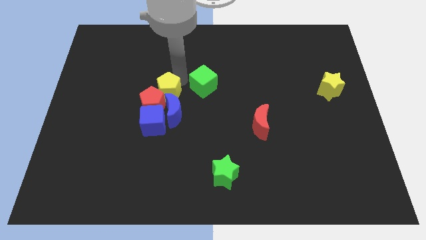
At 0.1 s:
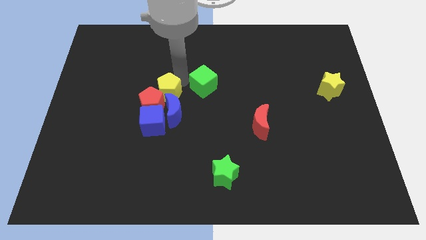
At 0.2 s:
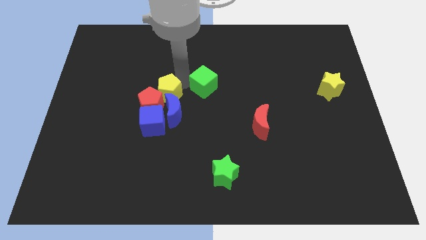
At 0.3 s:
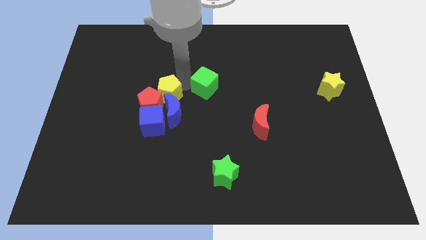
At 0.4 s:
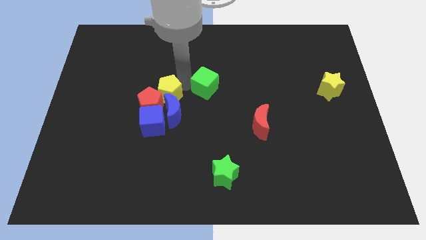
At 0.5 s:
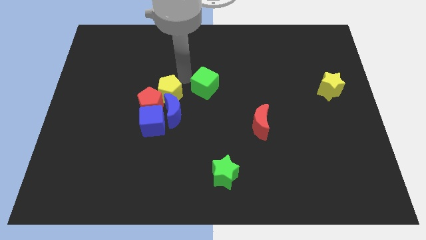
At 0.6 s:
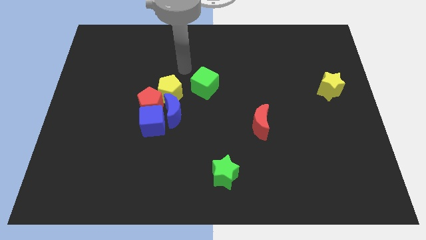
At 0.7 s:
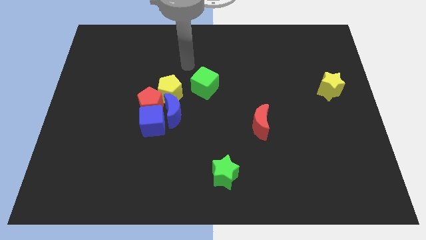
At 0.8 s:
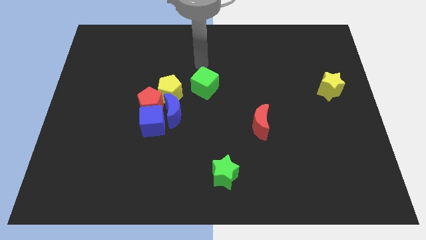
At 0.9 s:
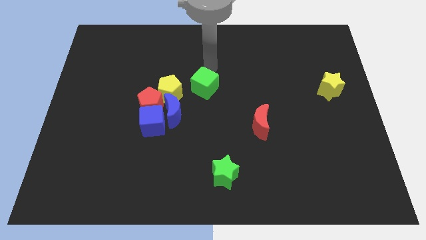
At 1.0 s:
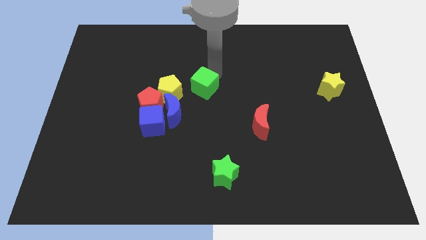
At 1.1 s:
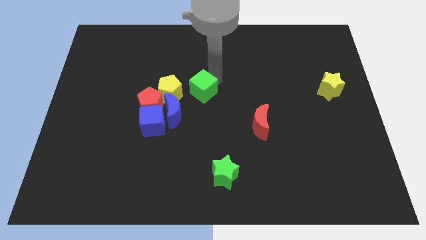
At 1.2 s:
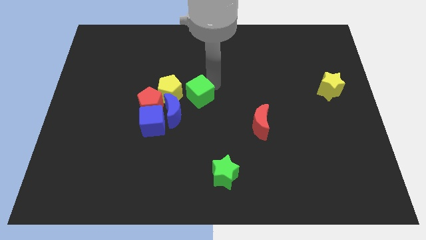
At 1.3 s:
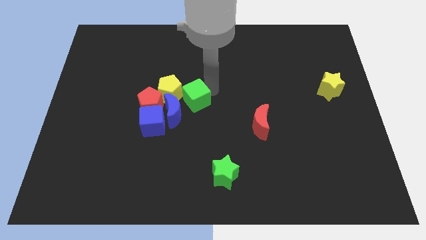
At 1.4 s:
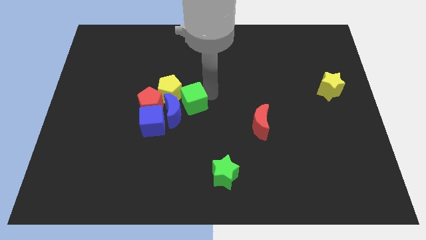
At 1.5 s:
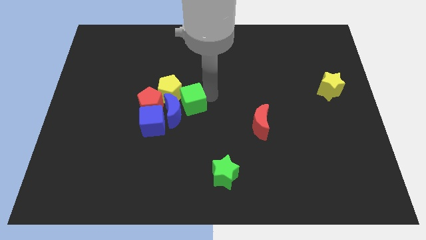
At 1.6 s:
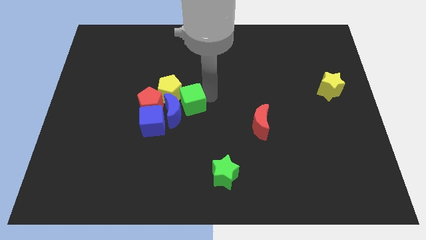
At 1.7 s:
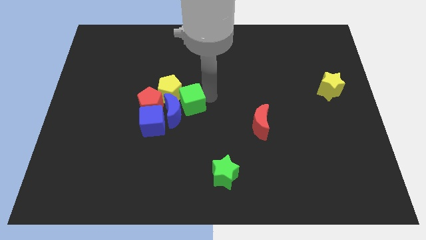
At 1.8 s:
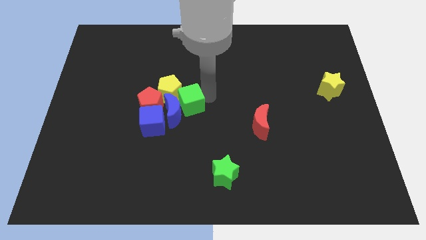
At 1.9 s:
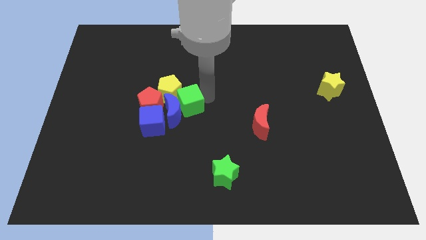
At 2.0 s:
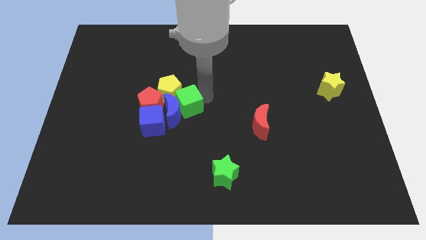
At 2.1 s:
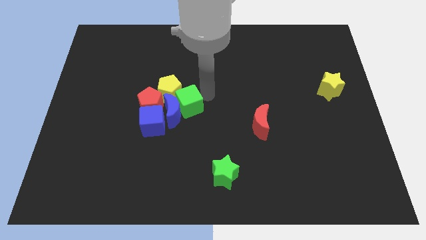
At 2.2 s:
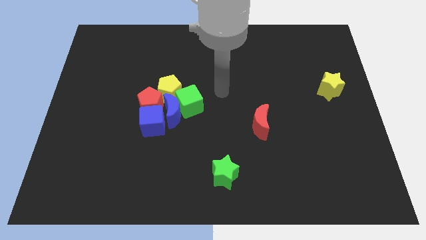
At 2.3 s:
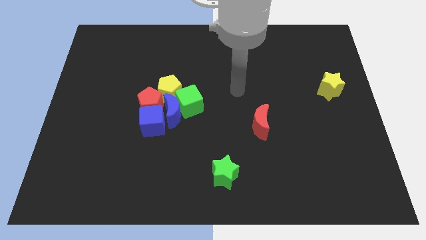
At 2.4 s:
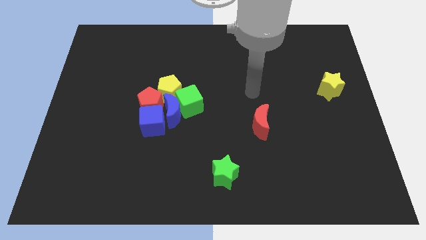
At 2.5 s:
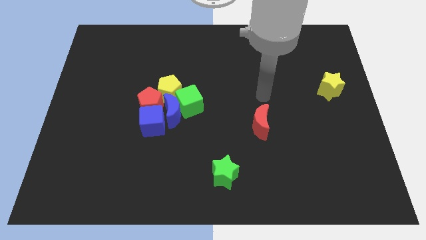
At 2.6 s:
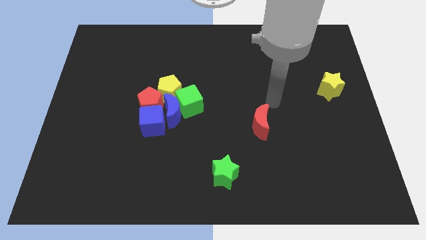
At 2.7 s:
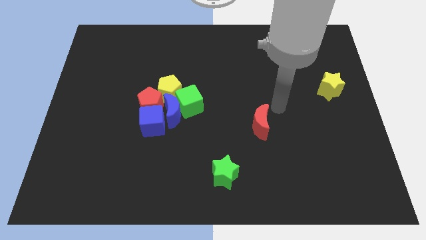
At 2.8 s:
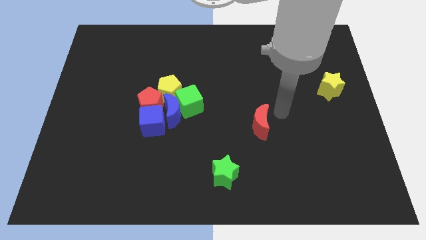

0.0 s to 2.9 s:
place the green cube right to the blue crescent

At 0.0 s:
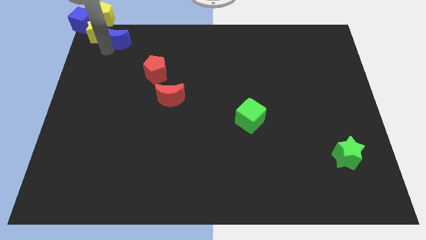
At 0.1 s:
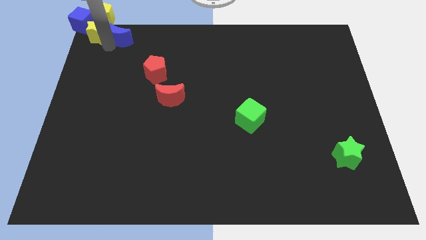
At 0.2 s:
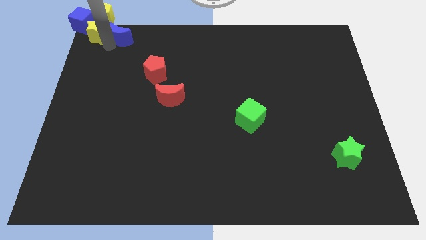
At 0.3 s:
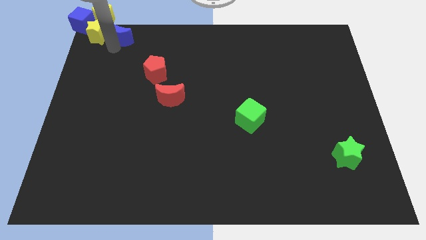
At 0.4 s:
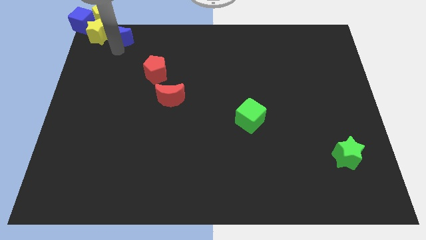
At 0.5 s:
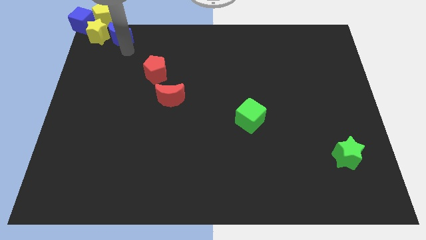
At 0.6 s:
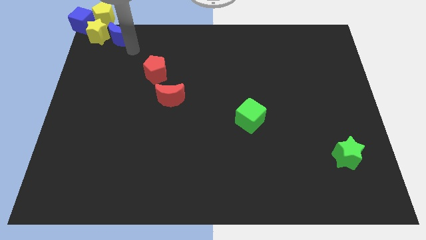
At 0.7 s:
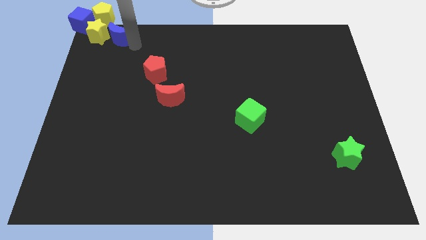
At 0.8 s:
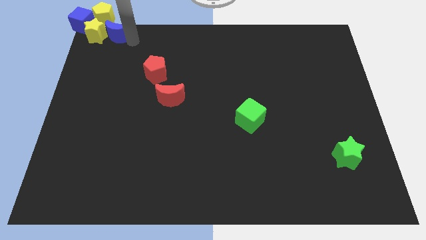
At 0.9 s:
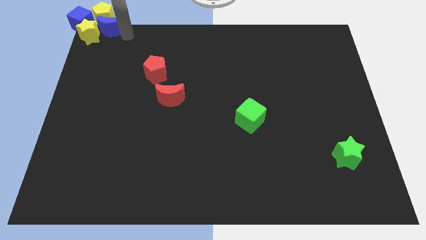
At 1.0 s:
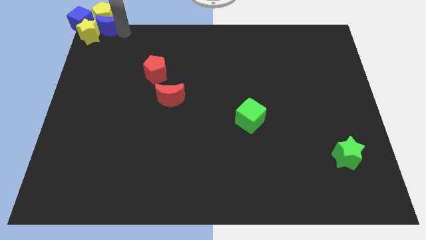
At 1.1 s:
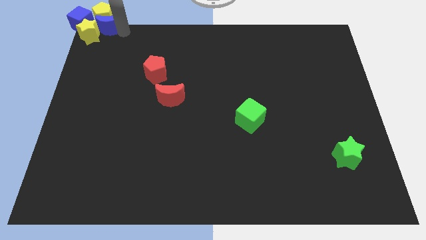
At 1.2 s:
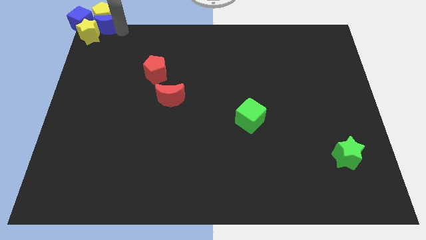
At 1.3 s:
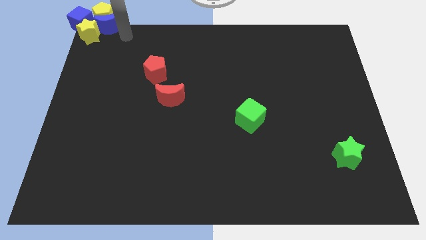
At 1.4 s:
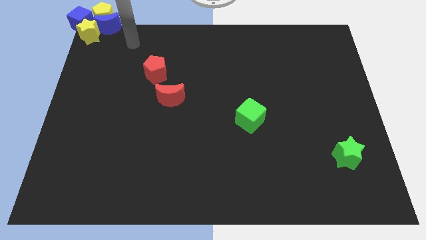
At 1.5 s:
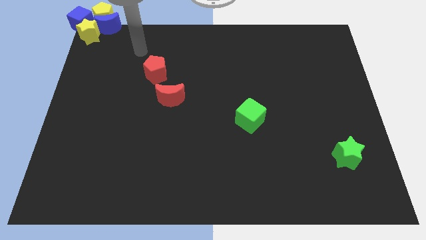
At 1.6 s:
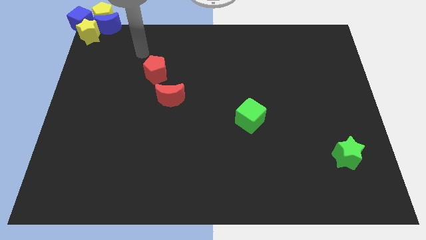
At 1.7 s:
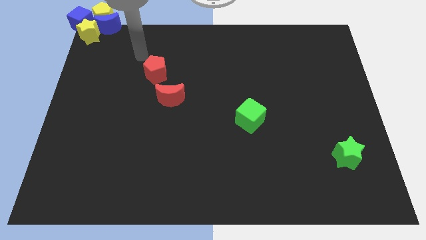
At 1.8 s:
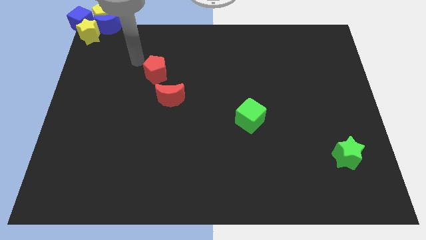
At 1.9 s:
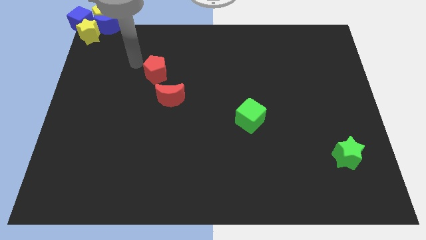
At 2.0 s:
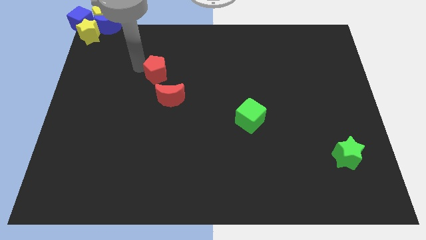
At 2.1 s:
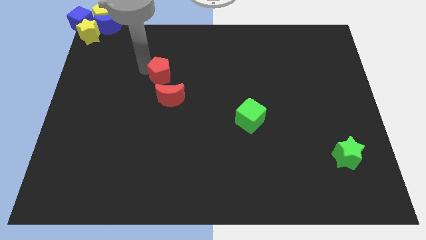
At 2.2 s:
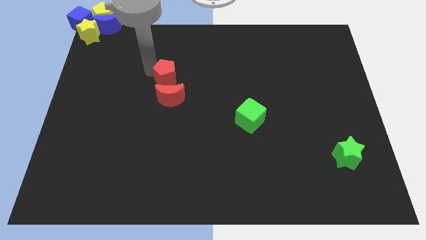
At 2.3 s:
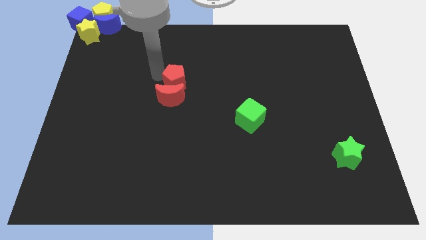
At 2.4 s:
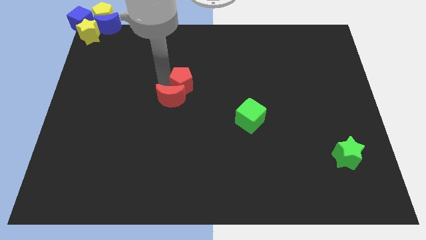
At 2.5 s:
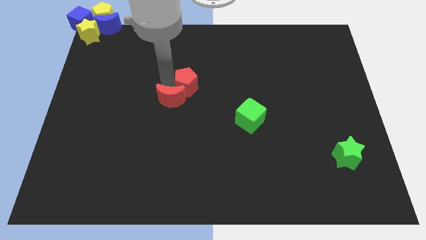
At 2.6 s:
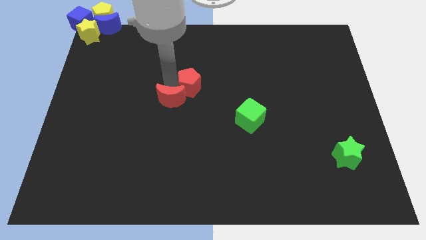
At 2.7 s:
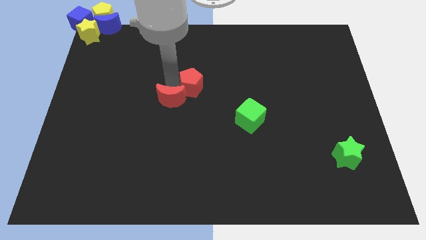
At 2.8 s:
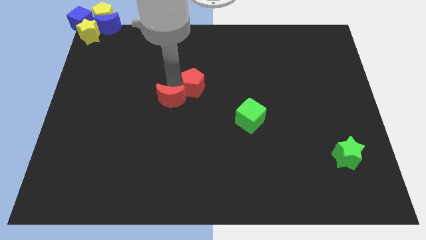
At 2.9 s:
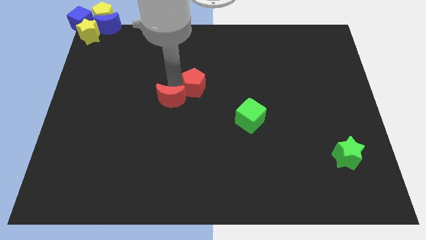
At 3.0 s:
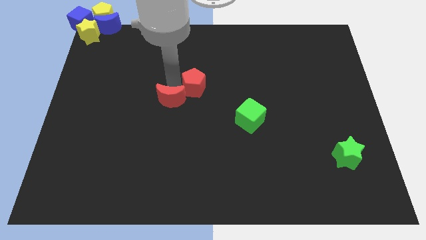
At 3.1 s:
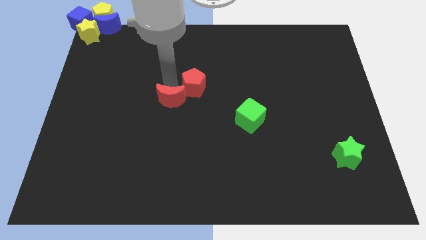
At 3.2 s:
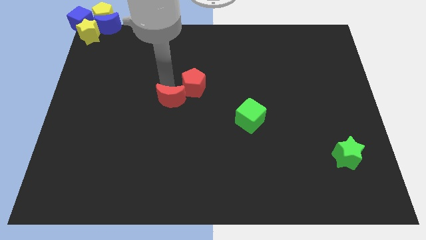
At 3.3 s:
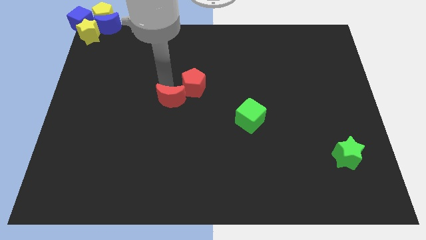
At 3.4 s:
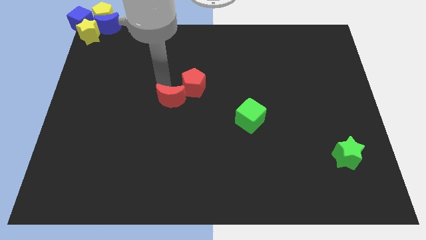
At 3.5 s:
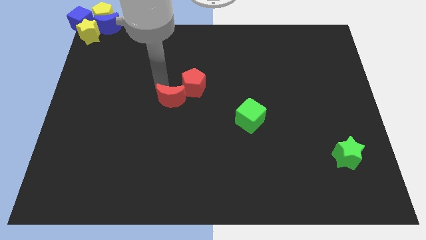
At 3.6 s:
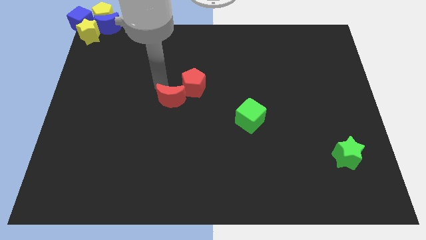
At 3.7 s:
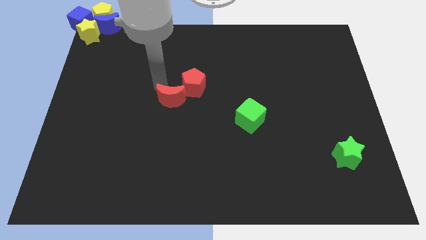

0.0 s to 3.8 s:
move red pentagon towards the red crescent

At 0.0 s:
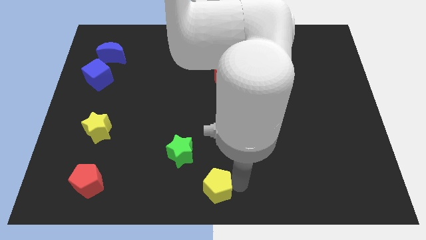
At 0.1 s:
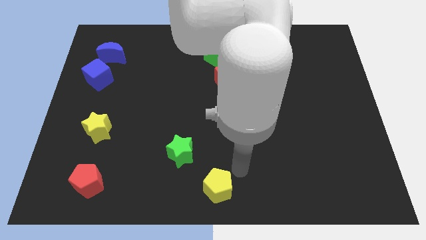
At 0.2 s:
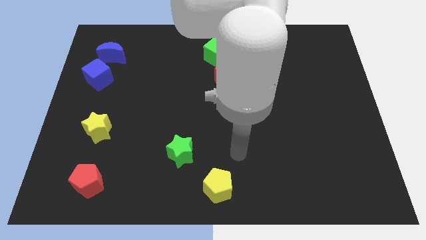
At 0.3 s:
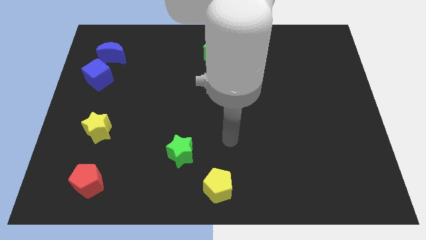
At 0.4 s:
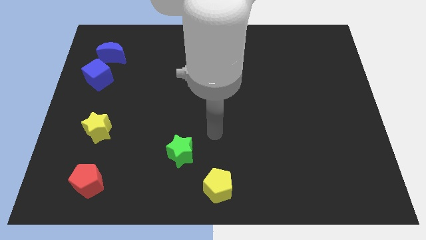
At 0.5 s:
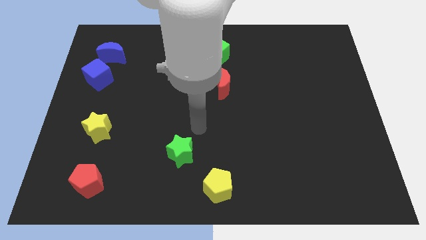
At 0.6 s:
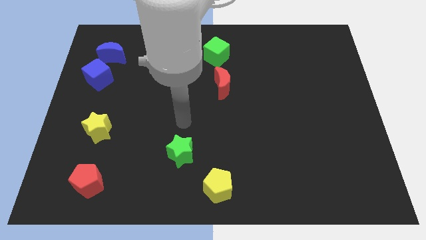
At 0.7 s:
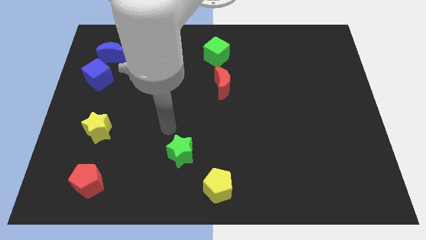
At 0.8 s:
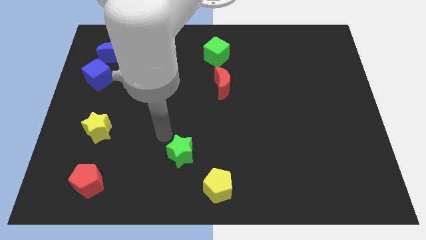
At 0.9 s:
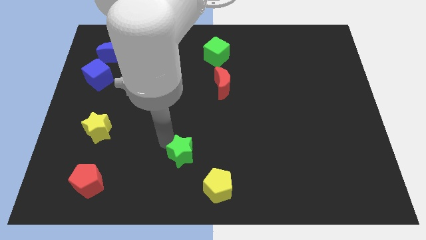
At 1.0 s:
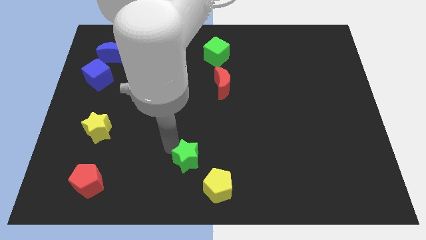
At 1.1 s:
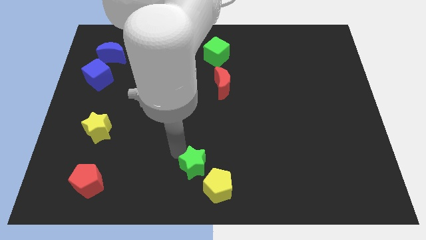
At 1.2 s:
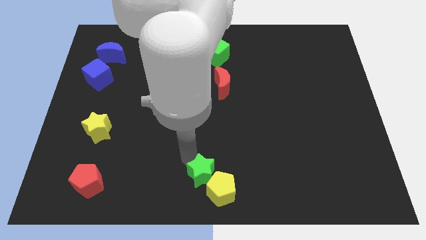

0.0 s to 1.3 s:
push green star towards yellow pentagon

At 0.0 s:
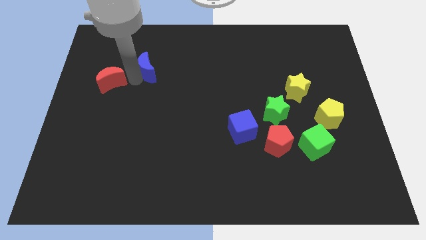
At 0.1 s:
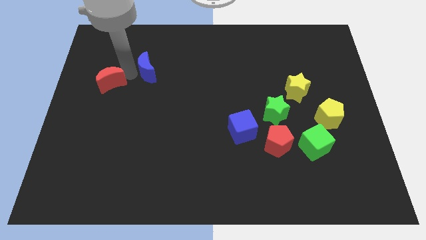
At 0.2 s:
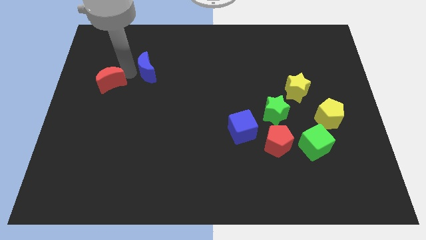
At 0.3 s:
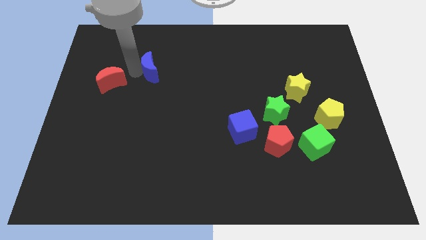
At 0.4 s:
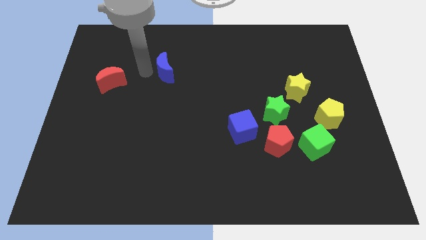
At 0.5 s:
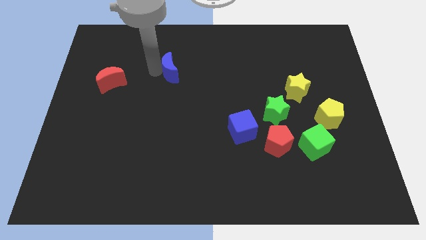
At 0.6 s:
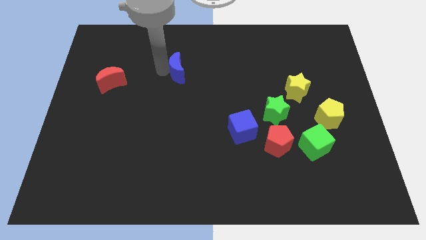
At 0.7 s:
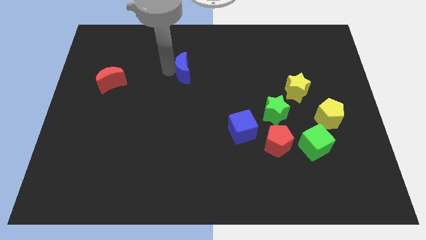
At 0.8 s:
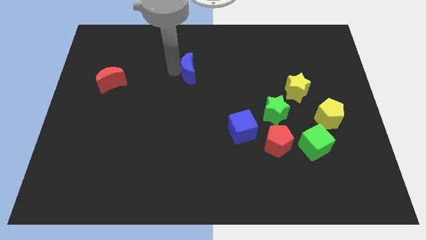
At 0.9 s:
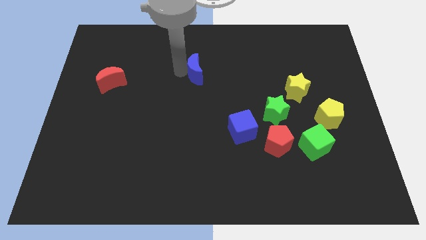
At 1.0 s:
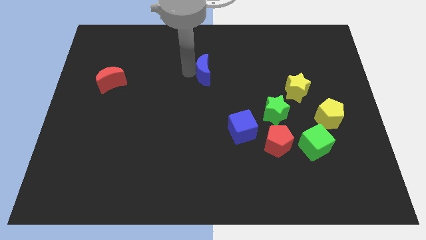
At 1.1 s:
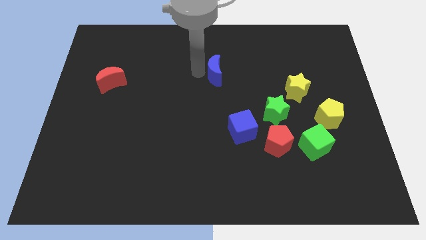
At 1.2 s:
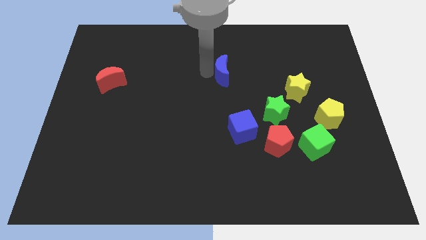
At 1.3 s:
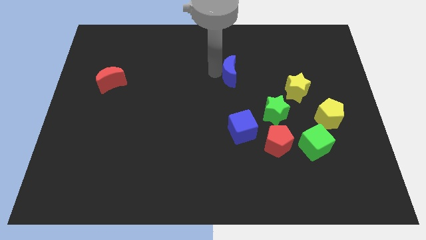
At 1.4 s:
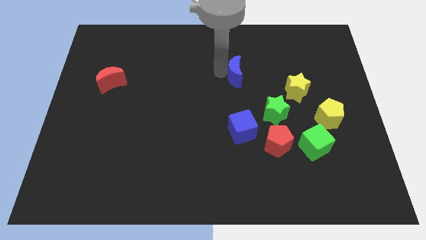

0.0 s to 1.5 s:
push blue crescent above blue cube
